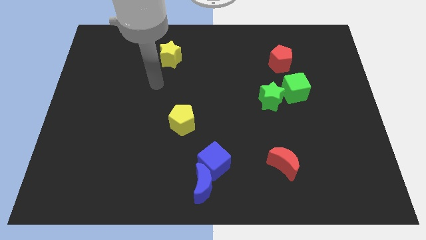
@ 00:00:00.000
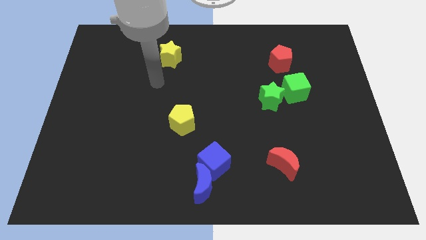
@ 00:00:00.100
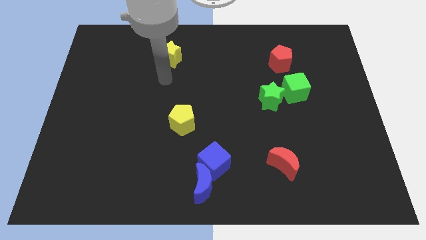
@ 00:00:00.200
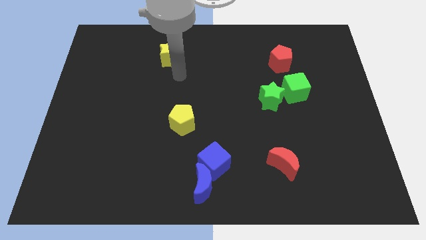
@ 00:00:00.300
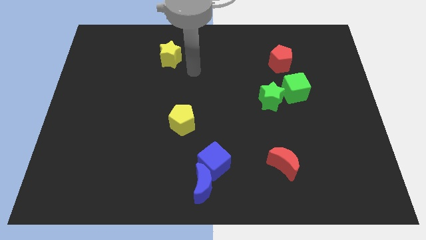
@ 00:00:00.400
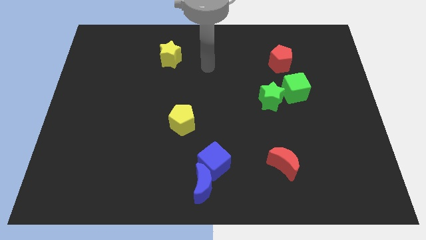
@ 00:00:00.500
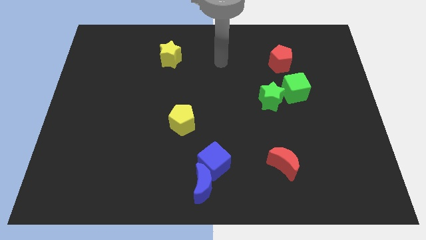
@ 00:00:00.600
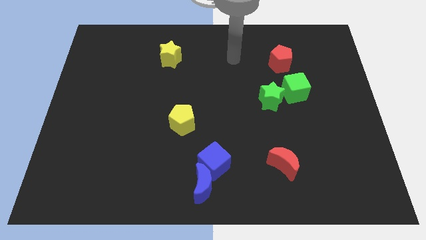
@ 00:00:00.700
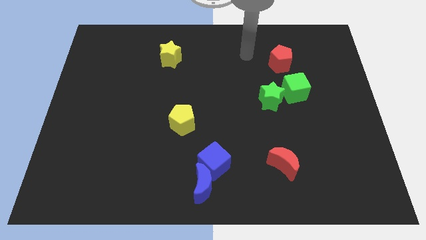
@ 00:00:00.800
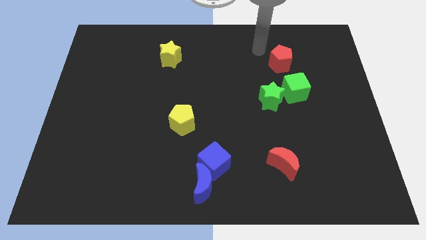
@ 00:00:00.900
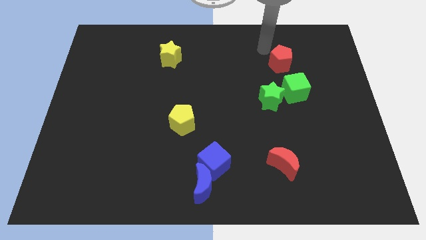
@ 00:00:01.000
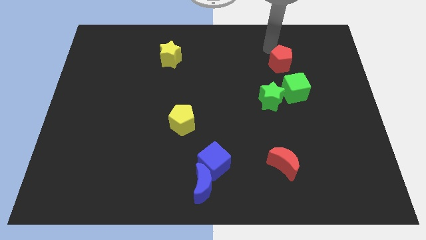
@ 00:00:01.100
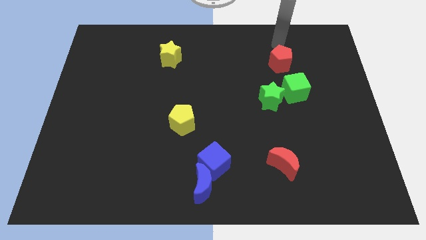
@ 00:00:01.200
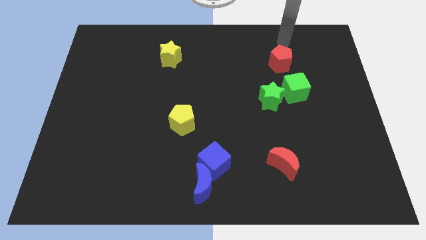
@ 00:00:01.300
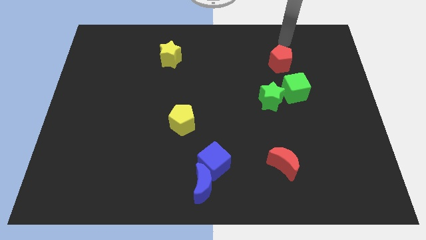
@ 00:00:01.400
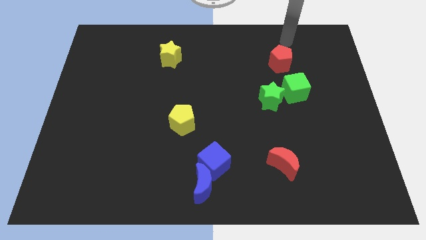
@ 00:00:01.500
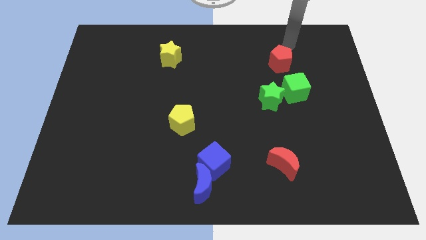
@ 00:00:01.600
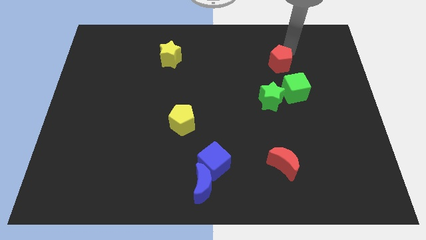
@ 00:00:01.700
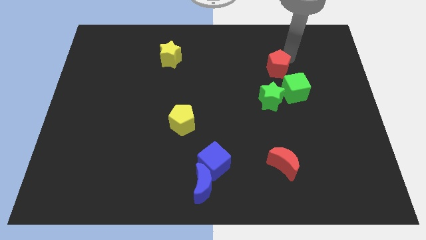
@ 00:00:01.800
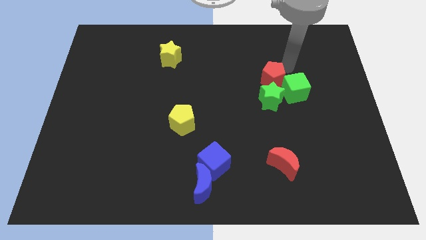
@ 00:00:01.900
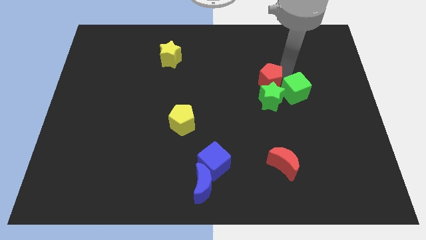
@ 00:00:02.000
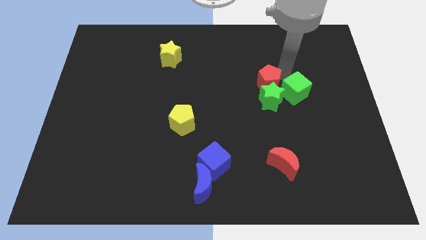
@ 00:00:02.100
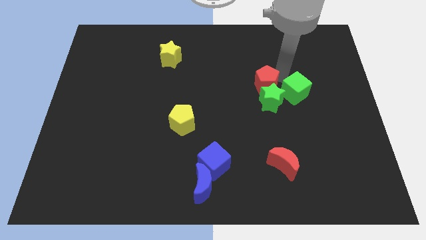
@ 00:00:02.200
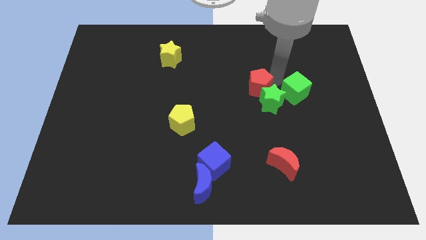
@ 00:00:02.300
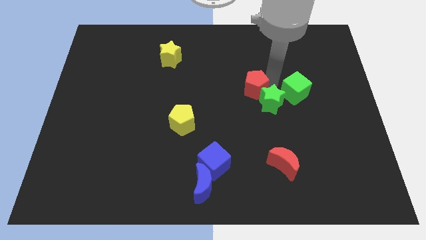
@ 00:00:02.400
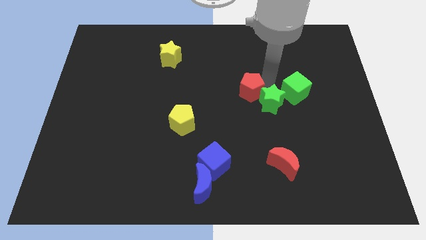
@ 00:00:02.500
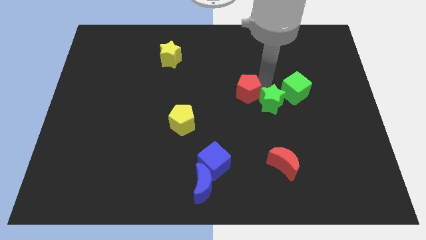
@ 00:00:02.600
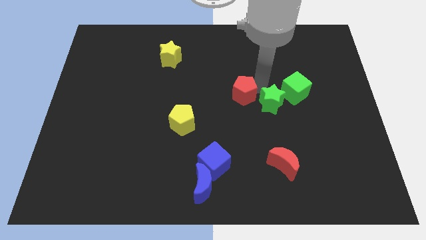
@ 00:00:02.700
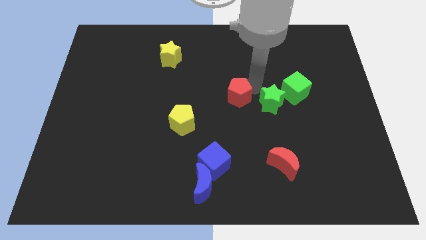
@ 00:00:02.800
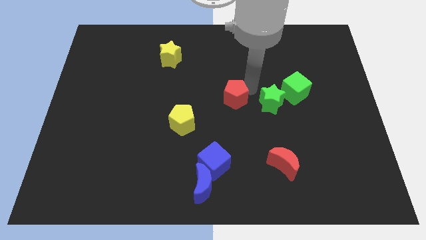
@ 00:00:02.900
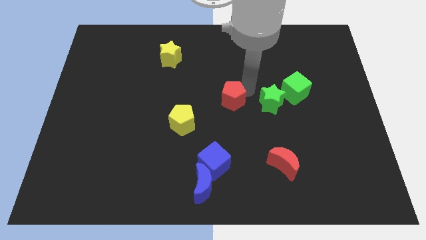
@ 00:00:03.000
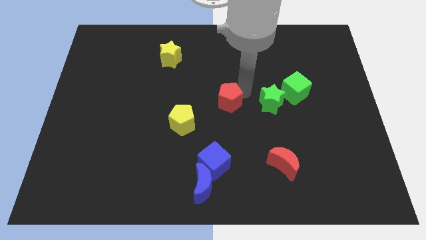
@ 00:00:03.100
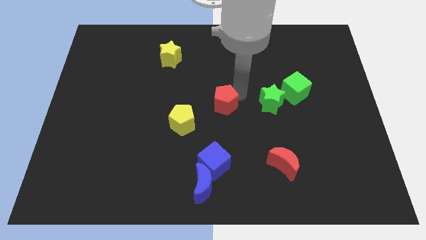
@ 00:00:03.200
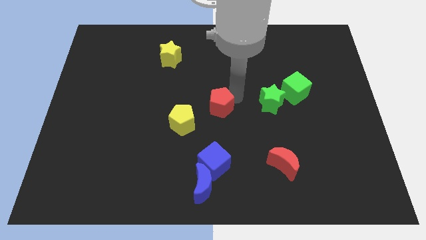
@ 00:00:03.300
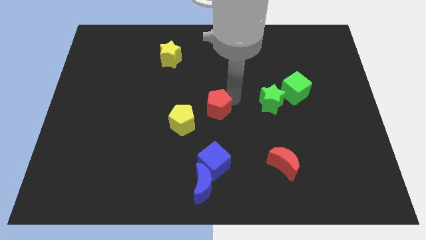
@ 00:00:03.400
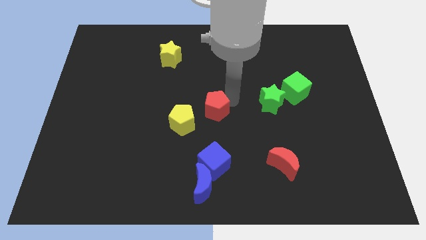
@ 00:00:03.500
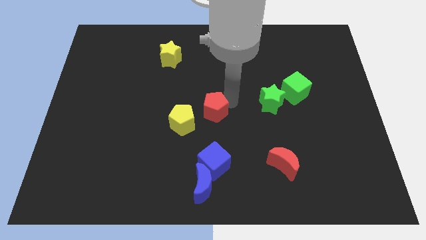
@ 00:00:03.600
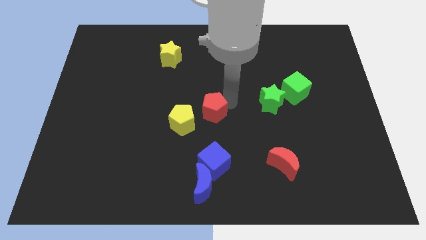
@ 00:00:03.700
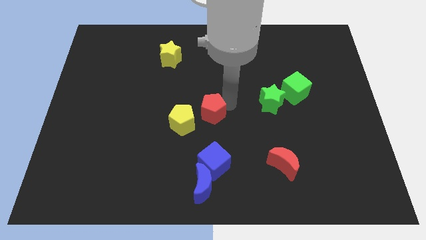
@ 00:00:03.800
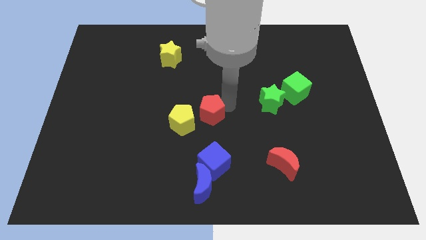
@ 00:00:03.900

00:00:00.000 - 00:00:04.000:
move red pentagon towards the yellow pentagon

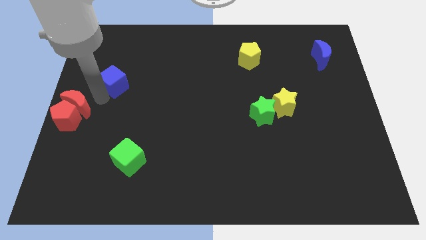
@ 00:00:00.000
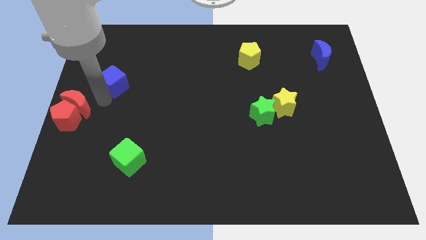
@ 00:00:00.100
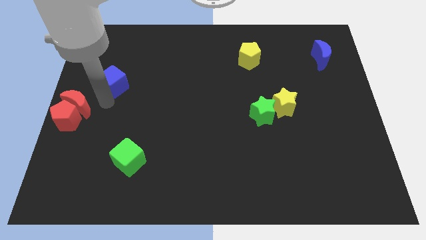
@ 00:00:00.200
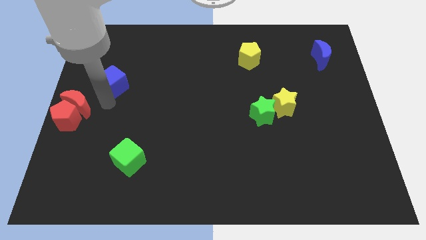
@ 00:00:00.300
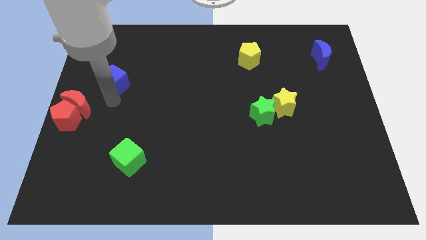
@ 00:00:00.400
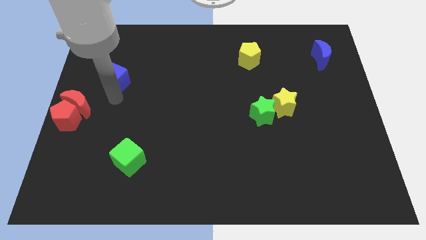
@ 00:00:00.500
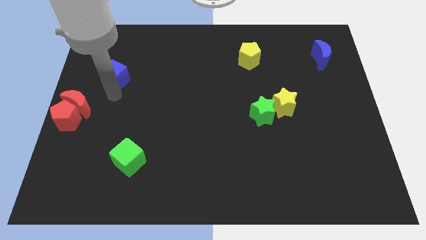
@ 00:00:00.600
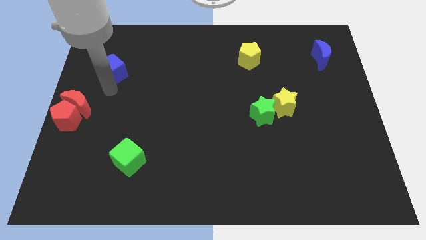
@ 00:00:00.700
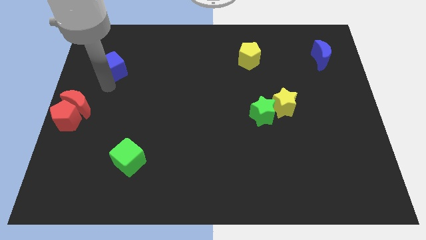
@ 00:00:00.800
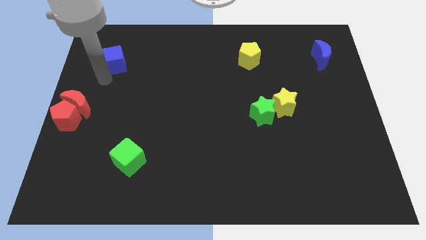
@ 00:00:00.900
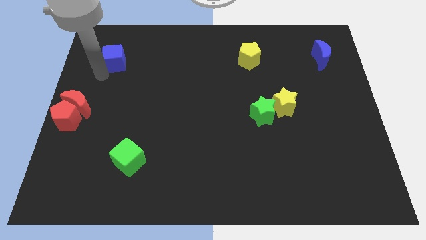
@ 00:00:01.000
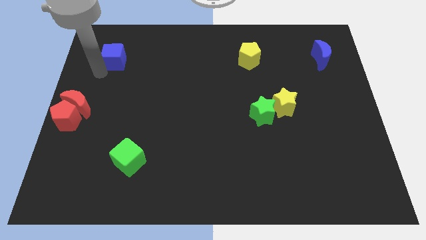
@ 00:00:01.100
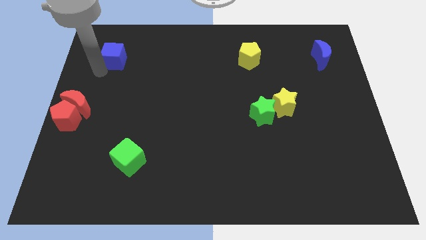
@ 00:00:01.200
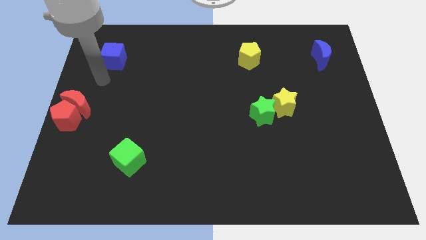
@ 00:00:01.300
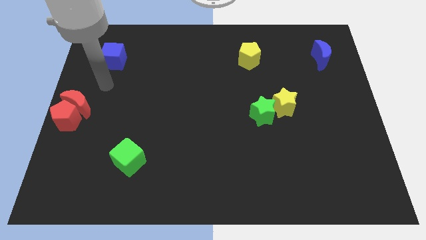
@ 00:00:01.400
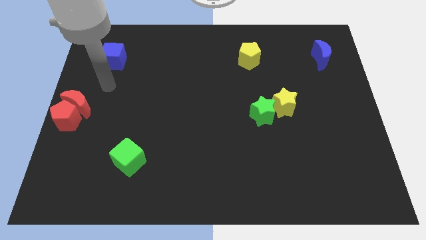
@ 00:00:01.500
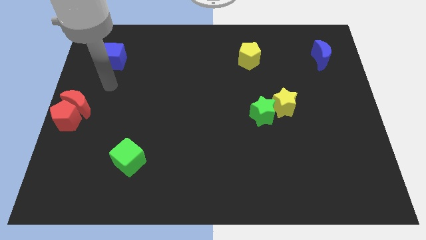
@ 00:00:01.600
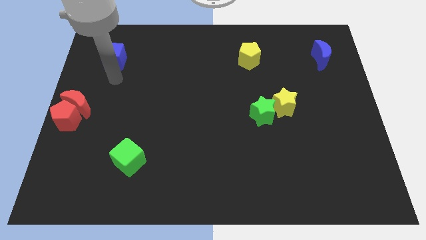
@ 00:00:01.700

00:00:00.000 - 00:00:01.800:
push the blue cube to the top left

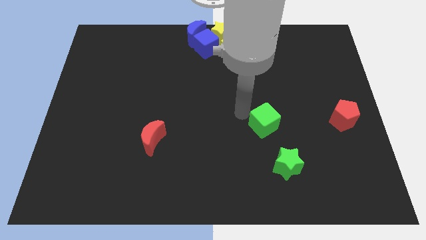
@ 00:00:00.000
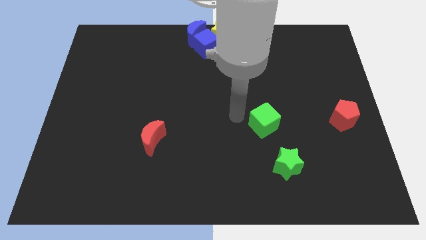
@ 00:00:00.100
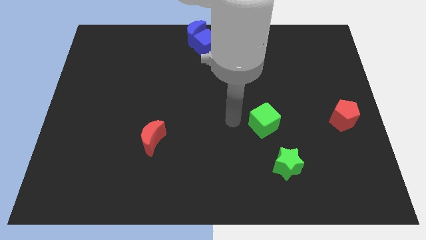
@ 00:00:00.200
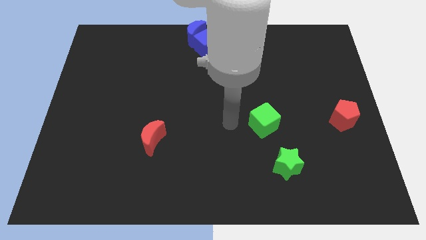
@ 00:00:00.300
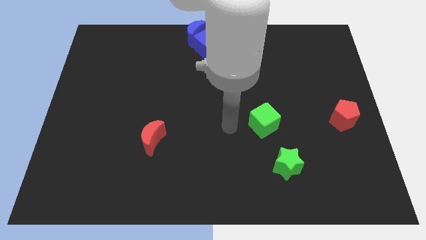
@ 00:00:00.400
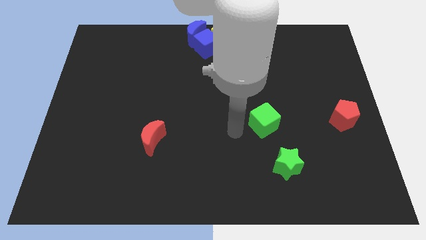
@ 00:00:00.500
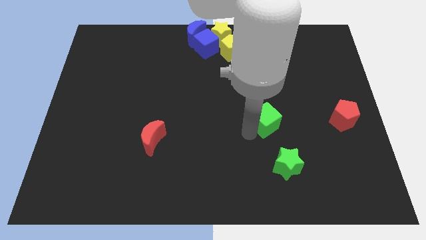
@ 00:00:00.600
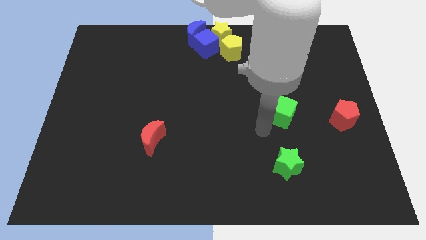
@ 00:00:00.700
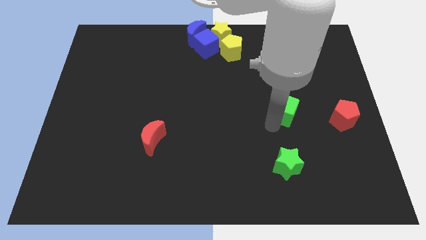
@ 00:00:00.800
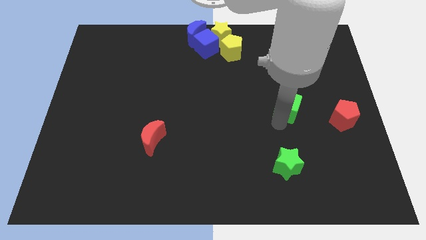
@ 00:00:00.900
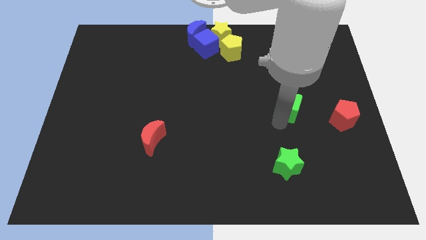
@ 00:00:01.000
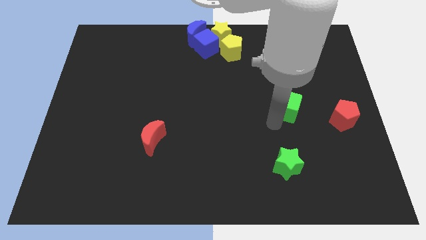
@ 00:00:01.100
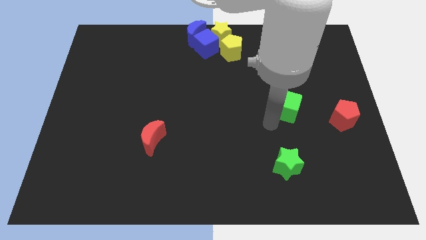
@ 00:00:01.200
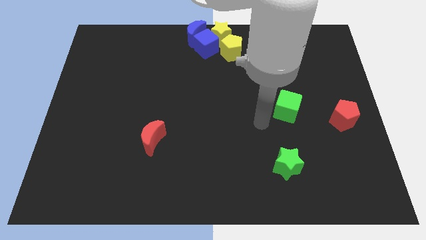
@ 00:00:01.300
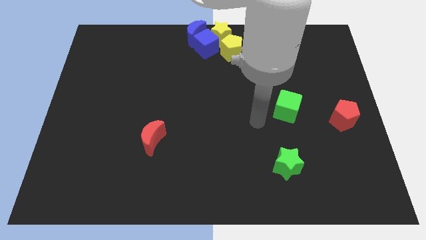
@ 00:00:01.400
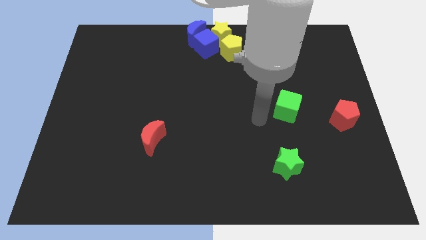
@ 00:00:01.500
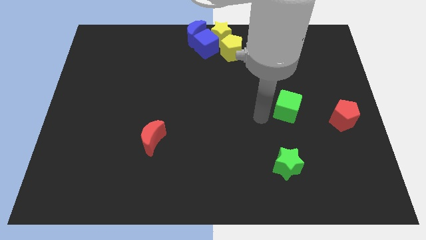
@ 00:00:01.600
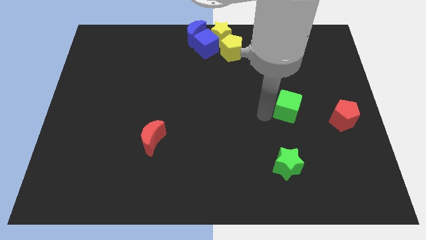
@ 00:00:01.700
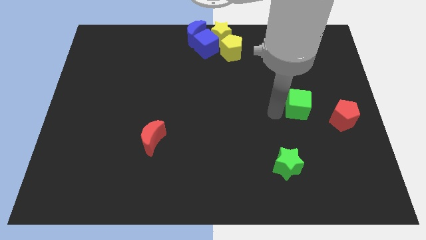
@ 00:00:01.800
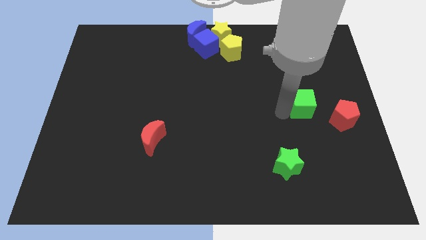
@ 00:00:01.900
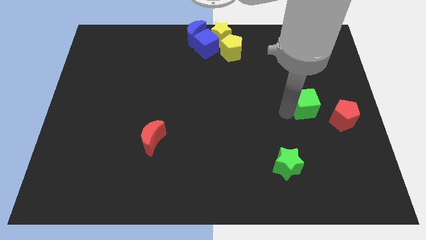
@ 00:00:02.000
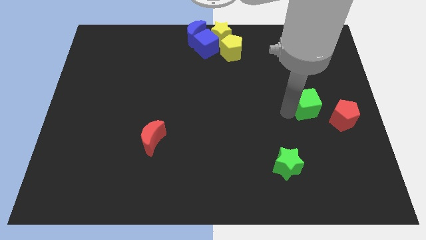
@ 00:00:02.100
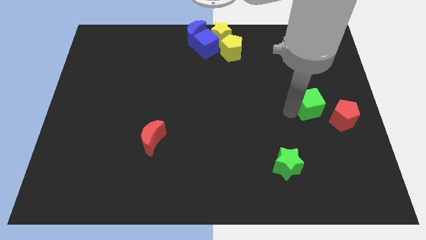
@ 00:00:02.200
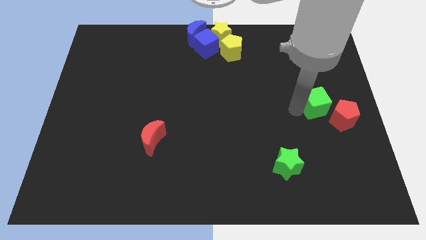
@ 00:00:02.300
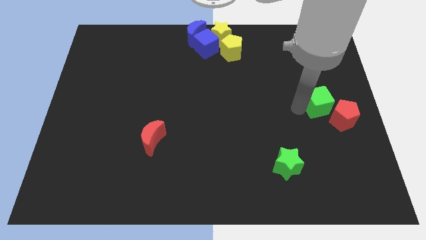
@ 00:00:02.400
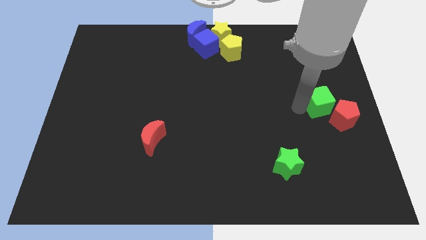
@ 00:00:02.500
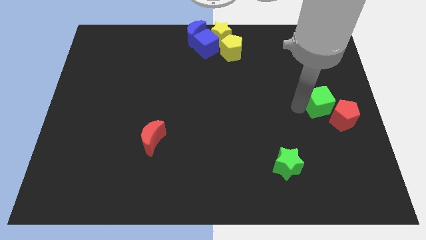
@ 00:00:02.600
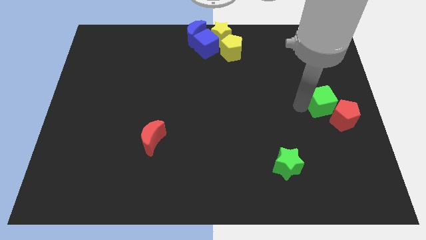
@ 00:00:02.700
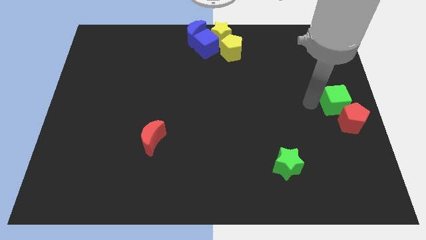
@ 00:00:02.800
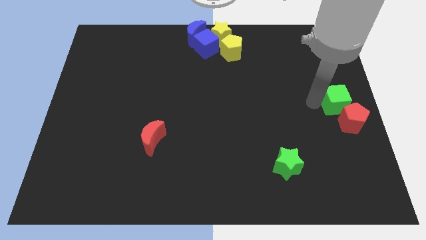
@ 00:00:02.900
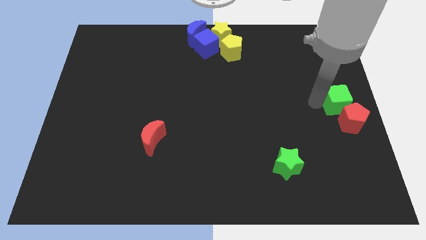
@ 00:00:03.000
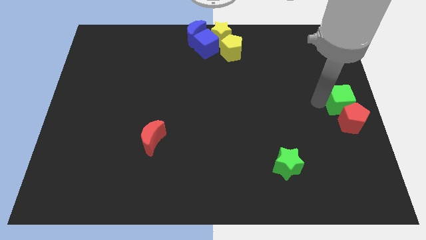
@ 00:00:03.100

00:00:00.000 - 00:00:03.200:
place the green cube in to red pentagon
